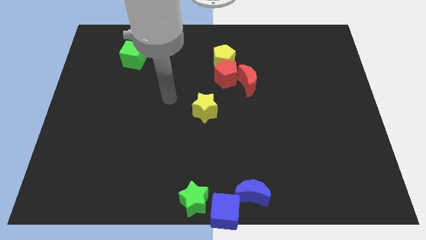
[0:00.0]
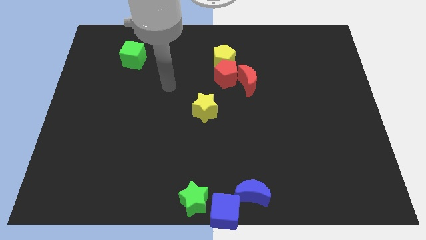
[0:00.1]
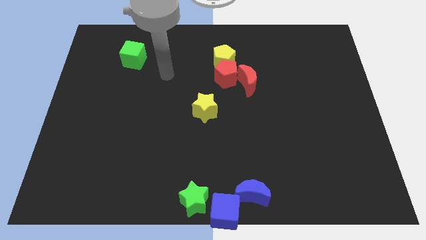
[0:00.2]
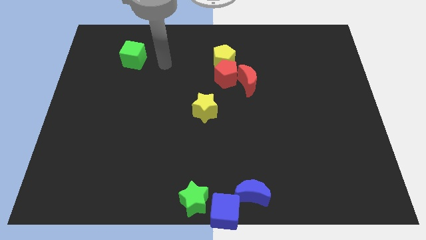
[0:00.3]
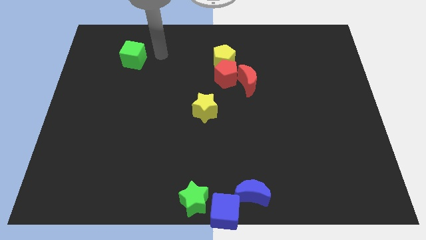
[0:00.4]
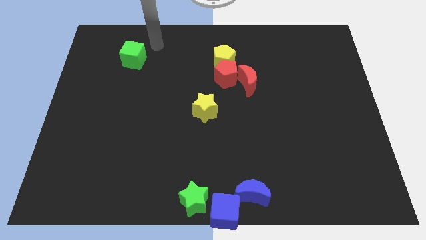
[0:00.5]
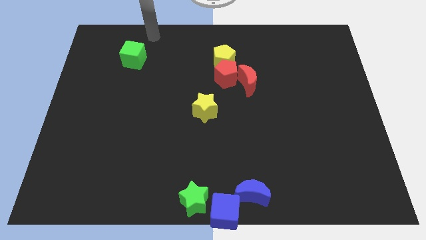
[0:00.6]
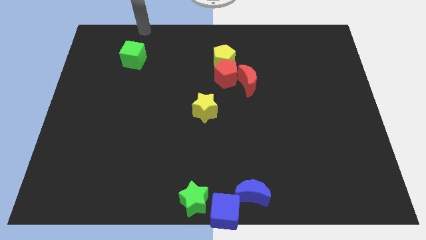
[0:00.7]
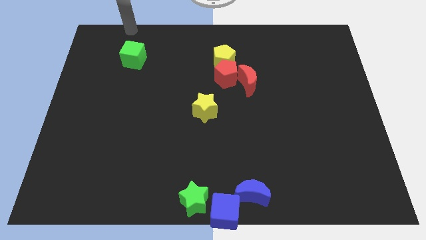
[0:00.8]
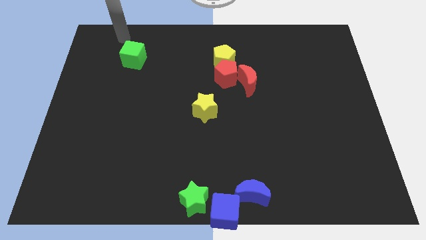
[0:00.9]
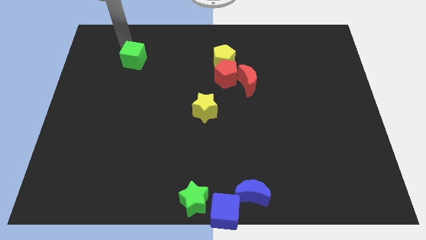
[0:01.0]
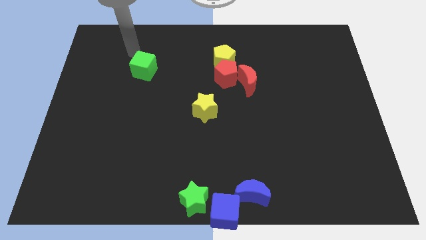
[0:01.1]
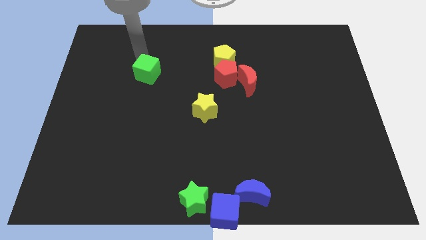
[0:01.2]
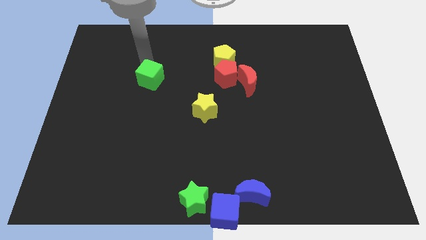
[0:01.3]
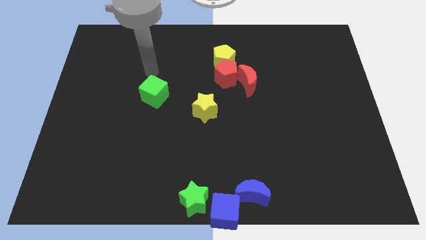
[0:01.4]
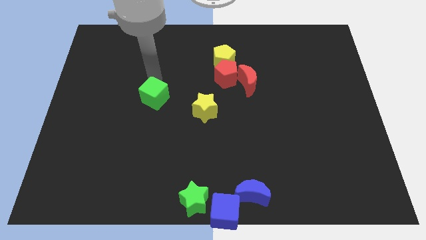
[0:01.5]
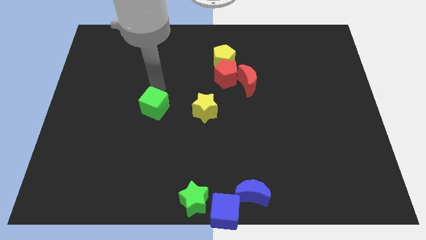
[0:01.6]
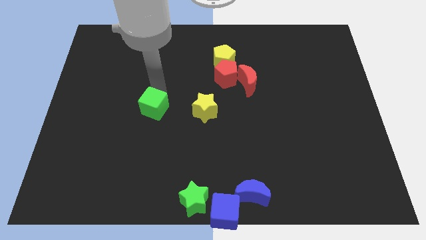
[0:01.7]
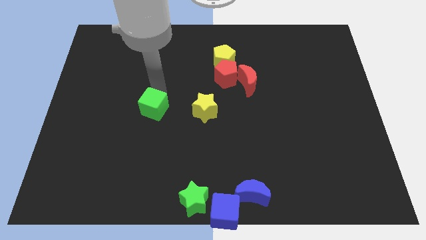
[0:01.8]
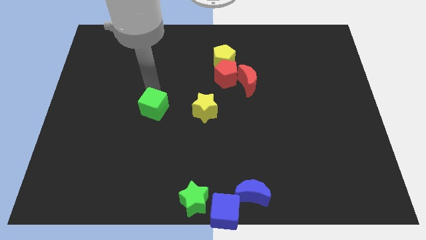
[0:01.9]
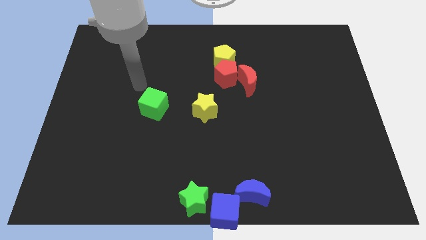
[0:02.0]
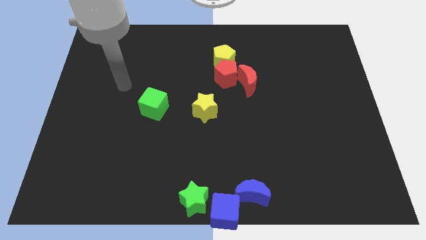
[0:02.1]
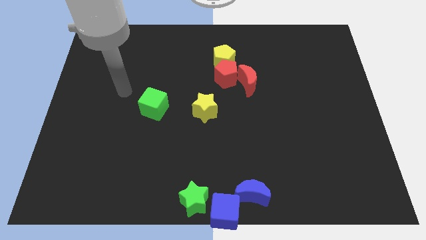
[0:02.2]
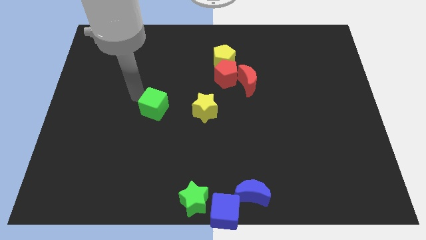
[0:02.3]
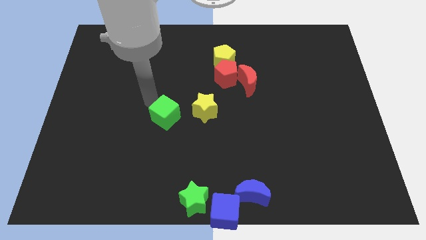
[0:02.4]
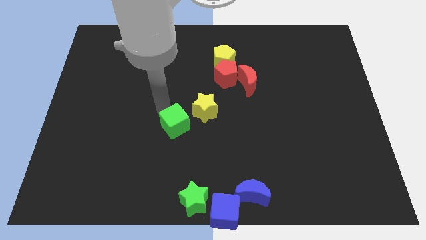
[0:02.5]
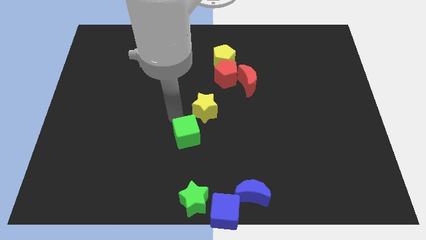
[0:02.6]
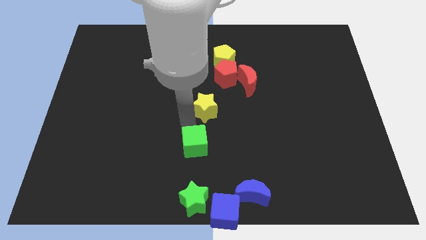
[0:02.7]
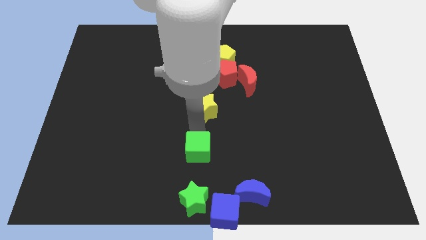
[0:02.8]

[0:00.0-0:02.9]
push green cube towards bottom center

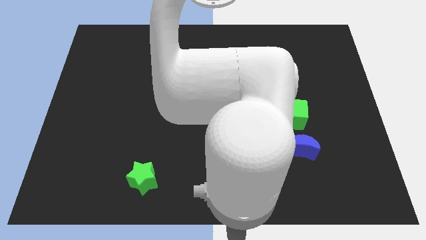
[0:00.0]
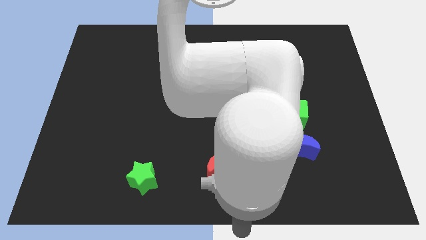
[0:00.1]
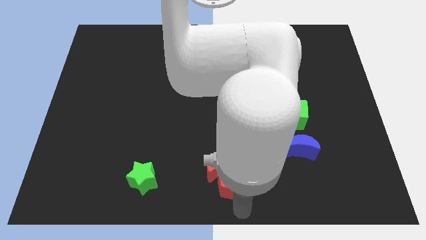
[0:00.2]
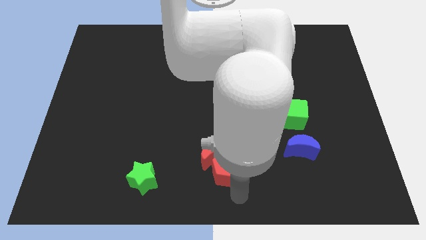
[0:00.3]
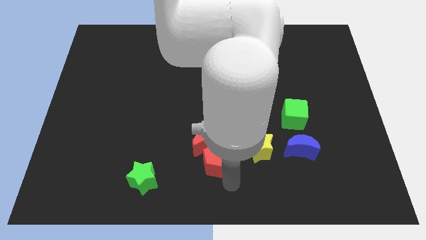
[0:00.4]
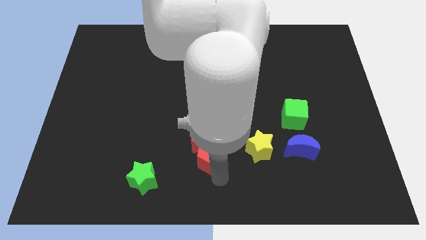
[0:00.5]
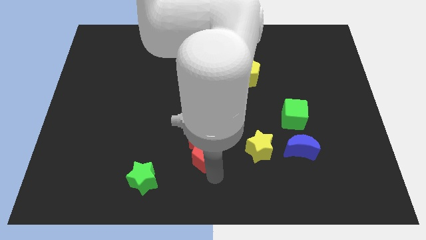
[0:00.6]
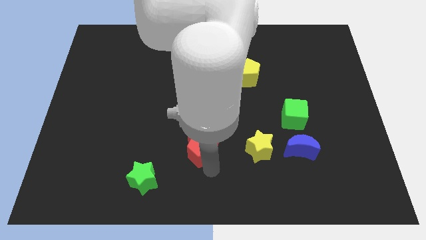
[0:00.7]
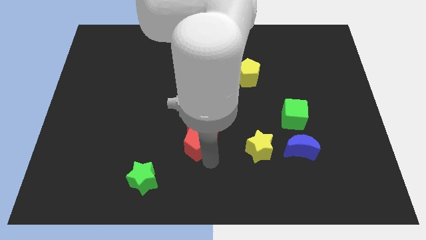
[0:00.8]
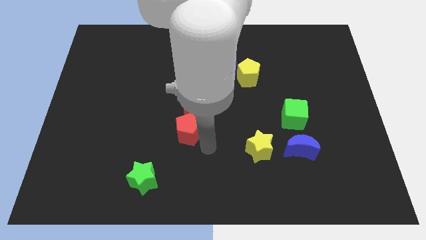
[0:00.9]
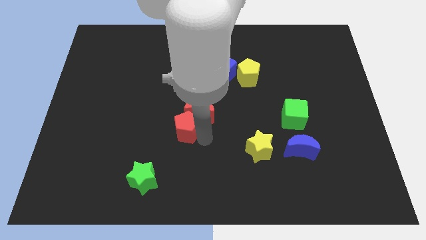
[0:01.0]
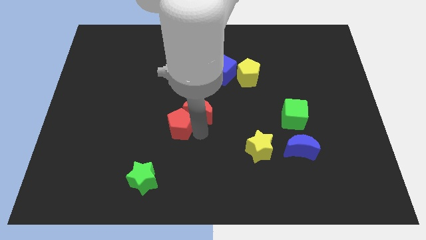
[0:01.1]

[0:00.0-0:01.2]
push the red pentagon into the red crescent

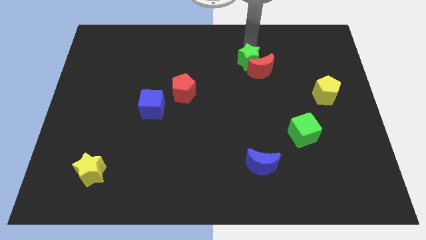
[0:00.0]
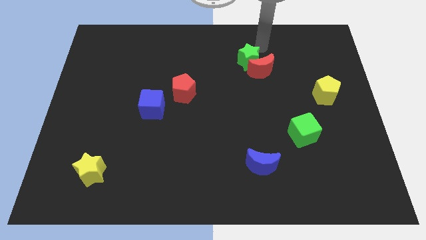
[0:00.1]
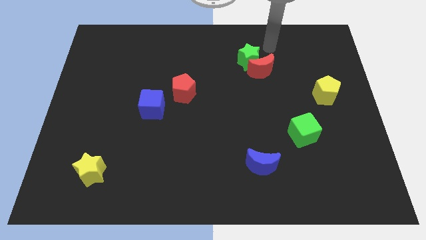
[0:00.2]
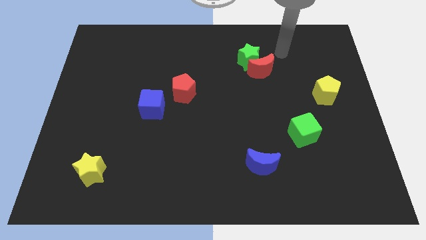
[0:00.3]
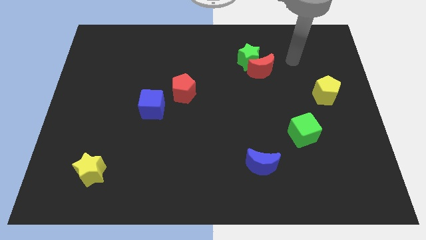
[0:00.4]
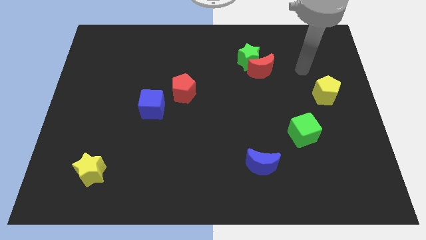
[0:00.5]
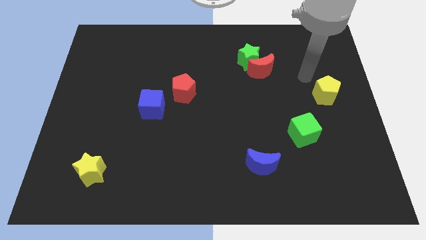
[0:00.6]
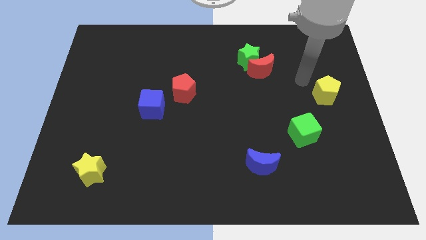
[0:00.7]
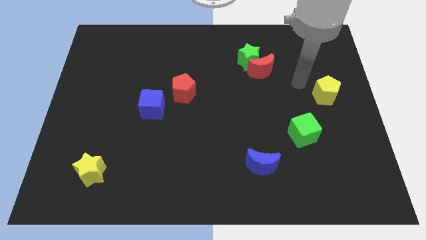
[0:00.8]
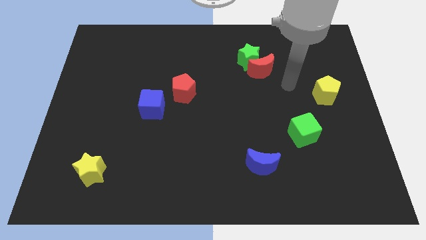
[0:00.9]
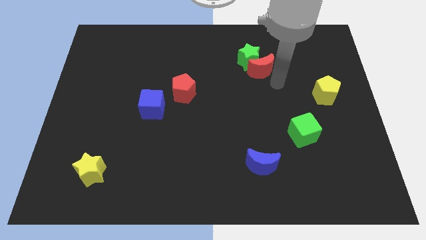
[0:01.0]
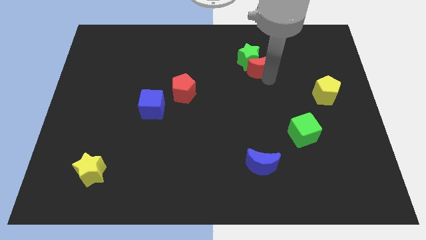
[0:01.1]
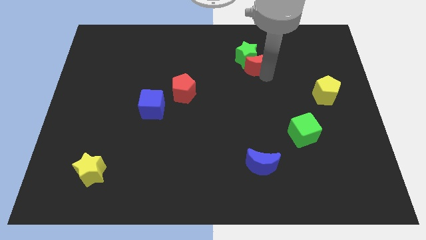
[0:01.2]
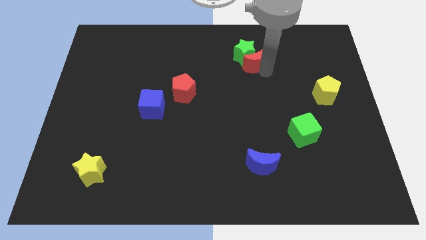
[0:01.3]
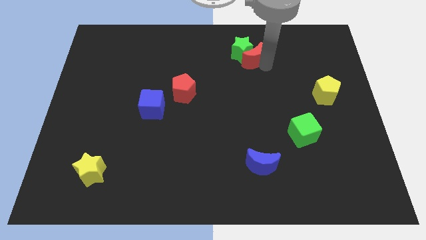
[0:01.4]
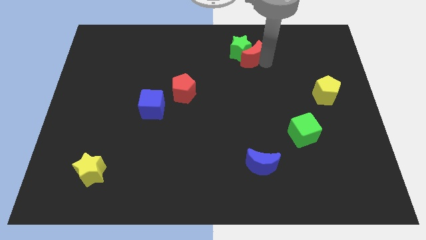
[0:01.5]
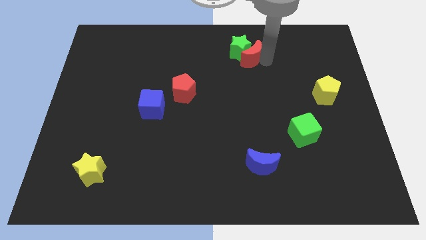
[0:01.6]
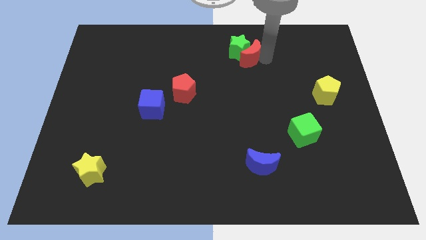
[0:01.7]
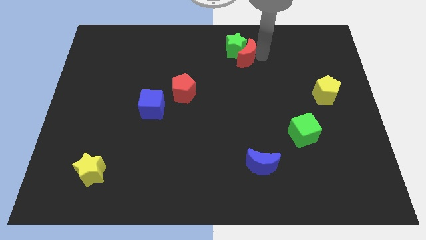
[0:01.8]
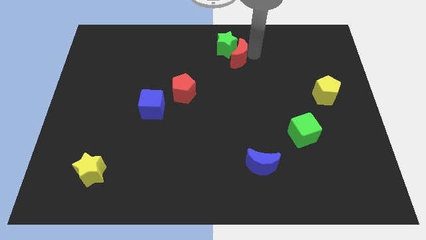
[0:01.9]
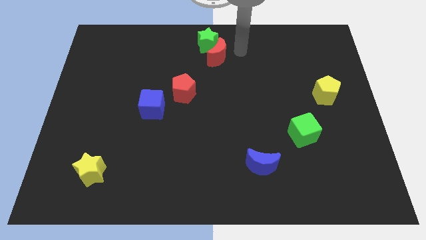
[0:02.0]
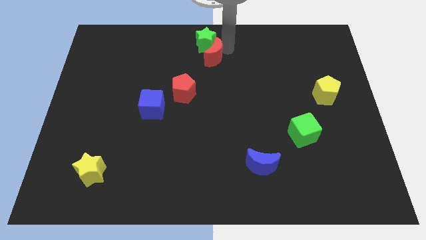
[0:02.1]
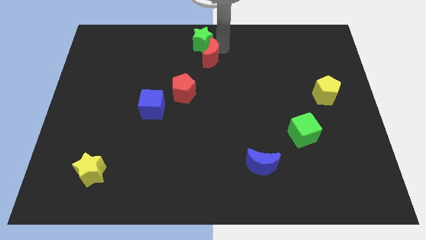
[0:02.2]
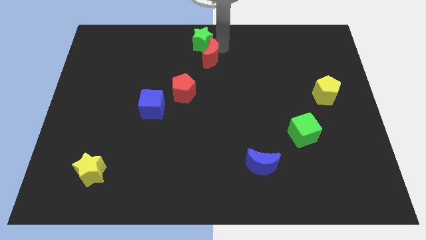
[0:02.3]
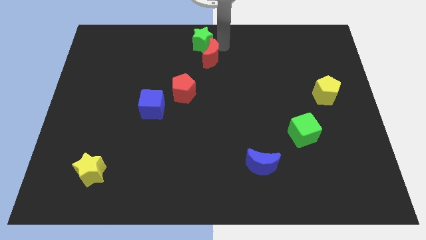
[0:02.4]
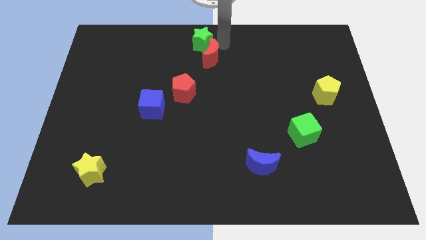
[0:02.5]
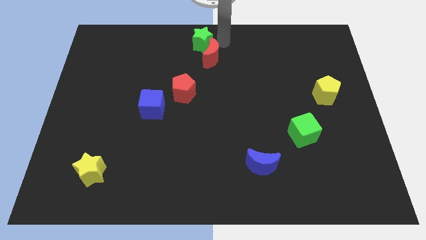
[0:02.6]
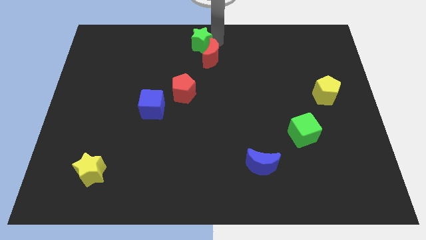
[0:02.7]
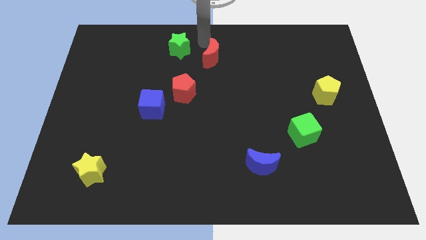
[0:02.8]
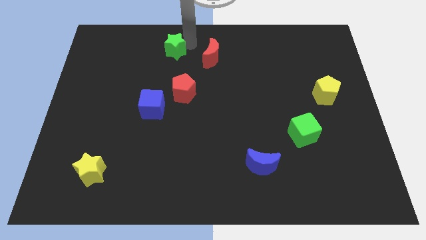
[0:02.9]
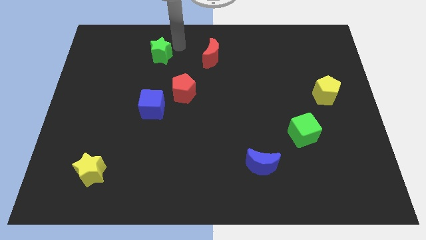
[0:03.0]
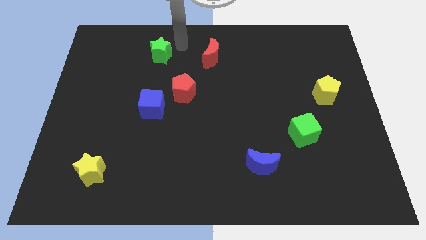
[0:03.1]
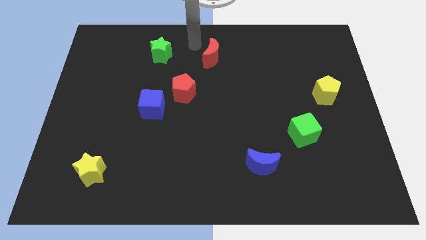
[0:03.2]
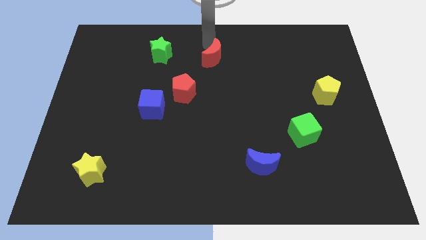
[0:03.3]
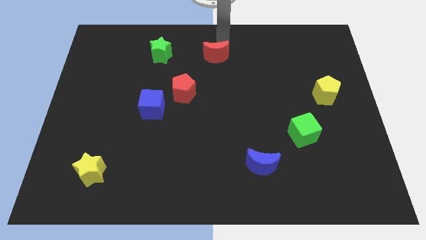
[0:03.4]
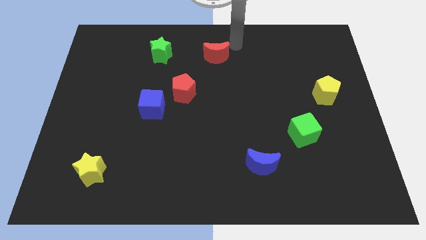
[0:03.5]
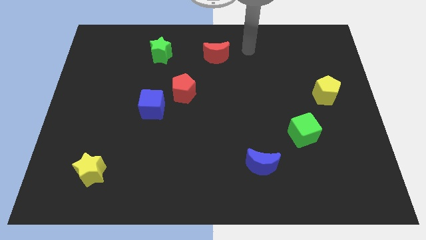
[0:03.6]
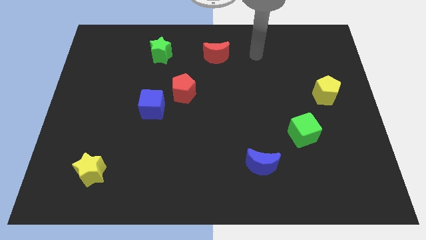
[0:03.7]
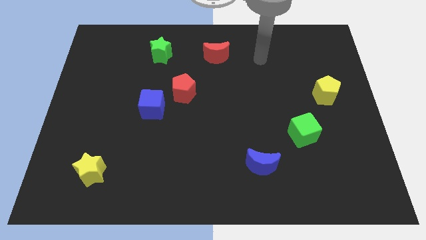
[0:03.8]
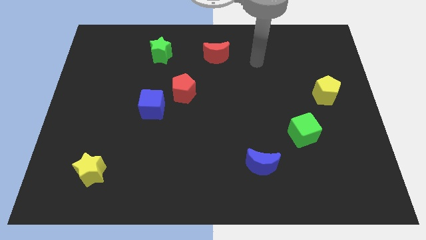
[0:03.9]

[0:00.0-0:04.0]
move the red crescent and green star to the left and separate them

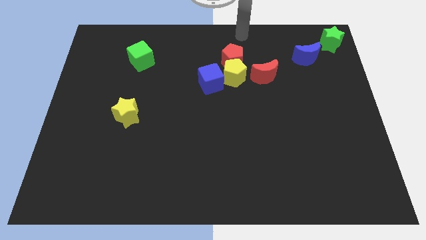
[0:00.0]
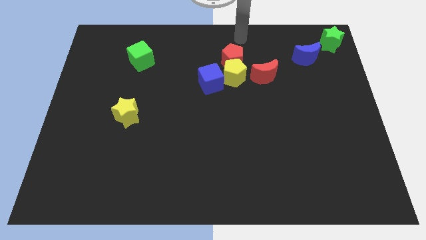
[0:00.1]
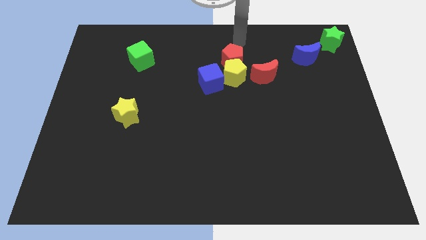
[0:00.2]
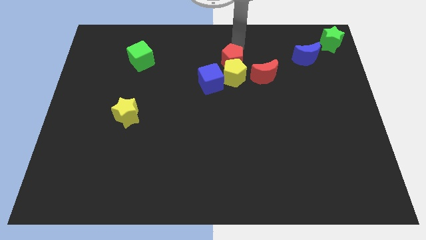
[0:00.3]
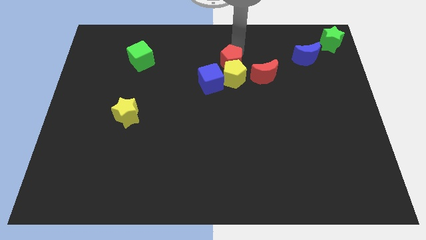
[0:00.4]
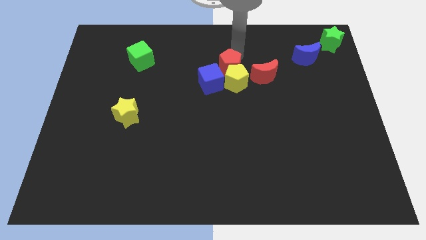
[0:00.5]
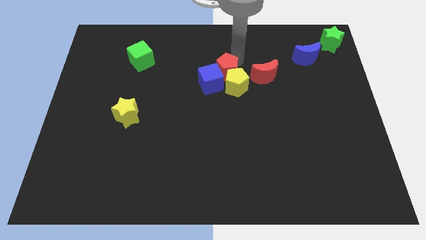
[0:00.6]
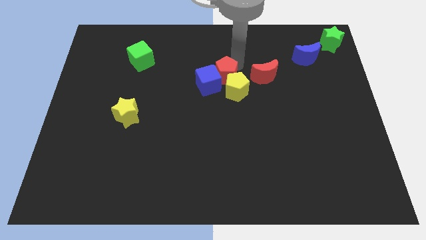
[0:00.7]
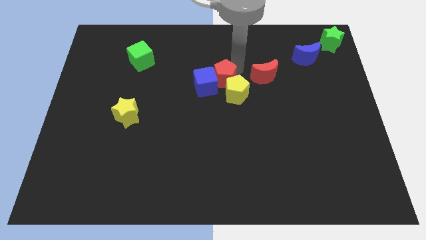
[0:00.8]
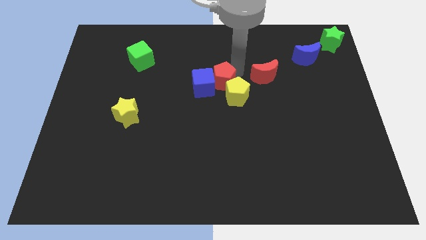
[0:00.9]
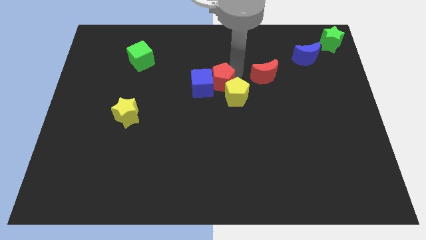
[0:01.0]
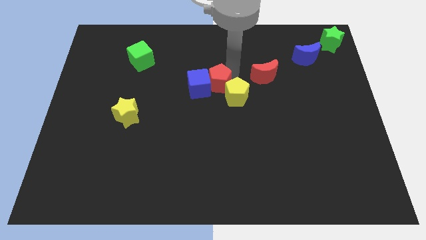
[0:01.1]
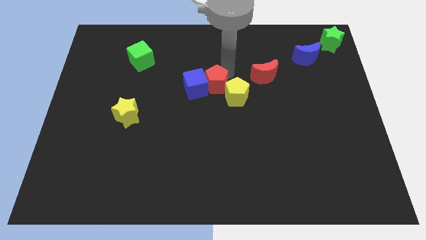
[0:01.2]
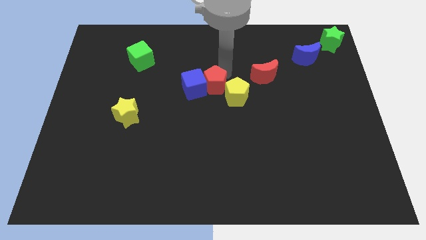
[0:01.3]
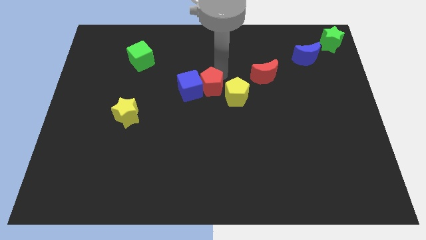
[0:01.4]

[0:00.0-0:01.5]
push the red pentagon with the yellow pentagon towards the center of the board
